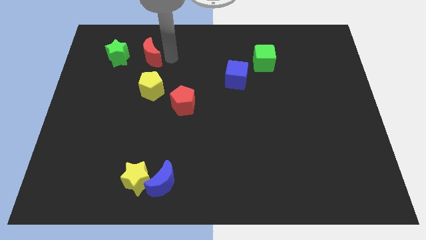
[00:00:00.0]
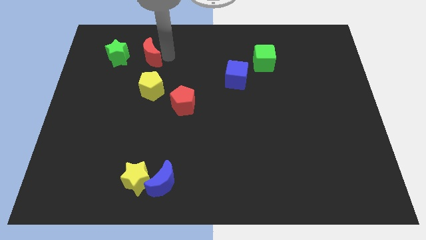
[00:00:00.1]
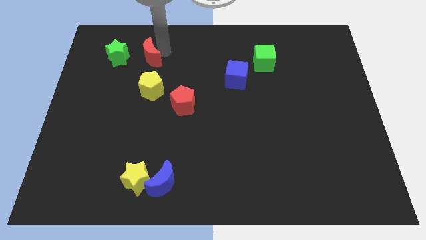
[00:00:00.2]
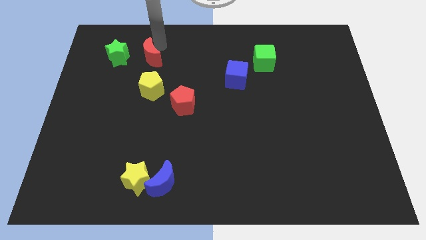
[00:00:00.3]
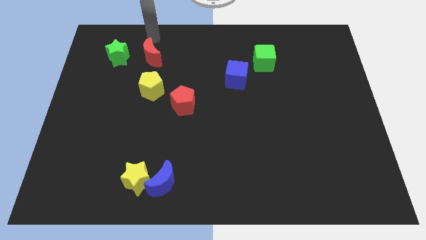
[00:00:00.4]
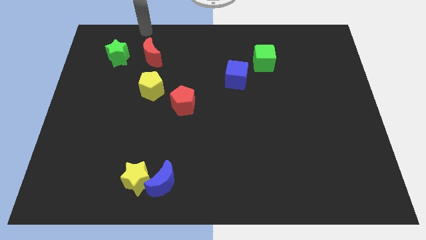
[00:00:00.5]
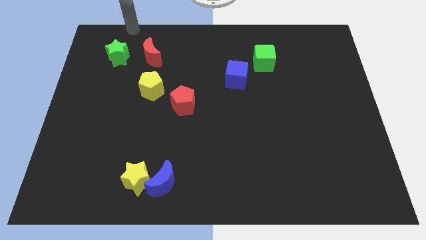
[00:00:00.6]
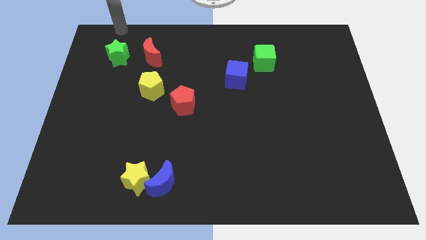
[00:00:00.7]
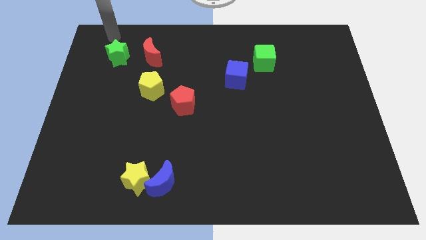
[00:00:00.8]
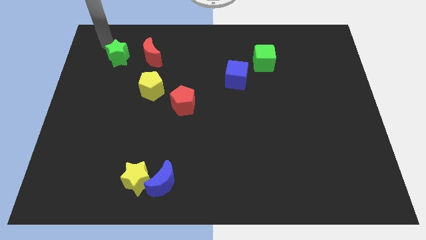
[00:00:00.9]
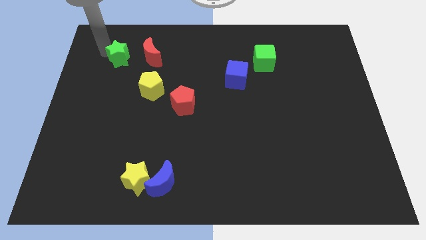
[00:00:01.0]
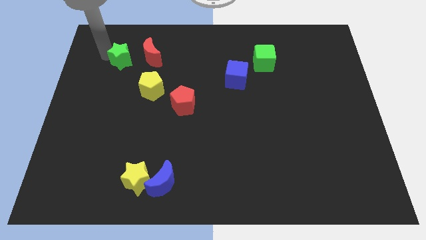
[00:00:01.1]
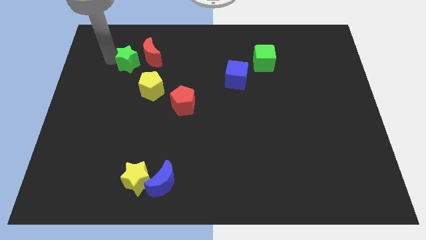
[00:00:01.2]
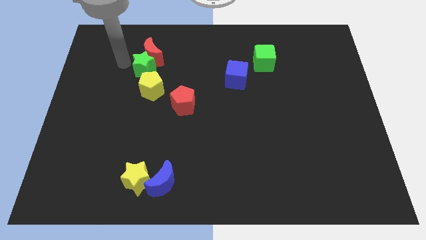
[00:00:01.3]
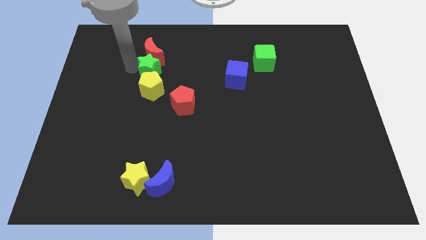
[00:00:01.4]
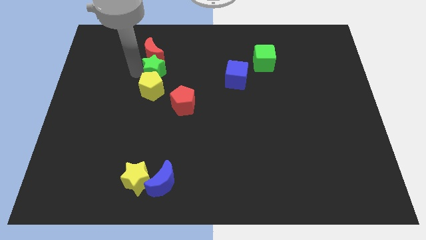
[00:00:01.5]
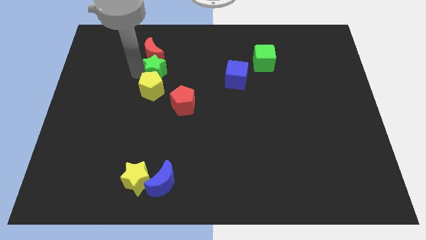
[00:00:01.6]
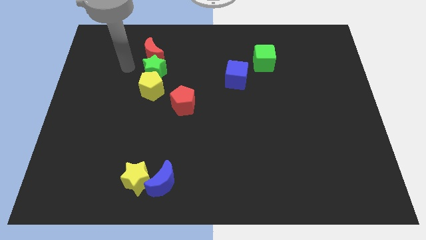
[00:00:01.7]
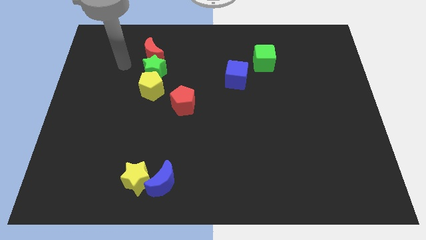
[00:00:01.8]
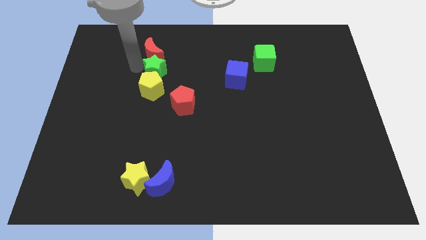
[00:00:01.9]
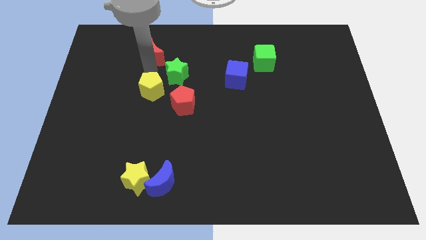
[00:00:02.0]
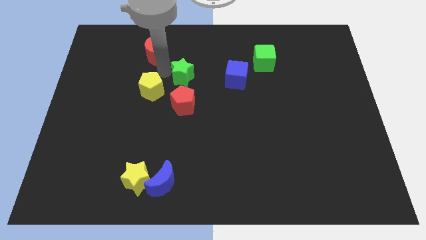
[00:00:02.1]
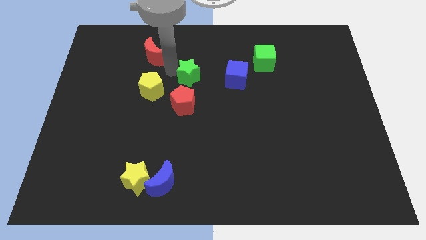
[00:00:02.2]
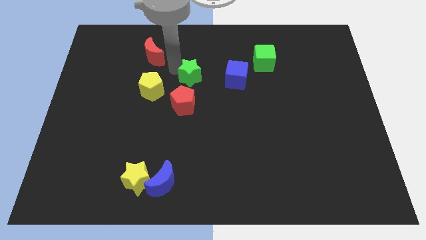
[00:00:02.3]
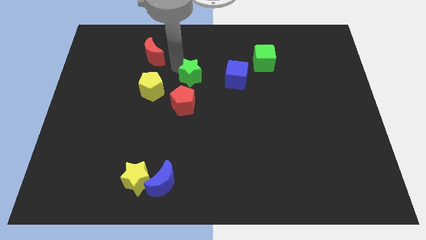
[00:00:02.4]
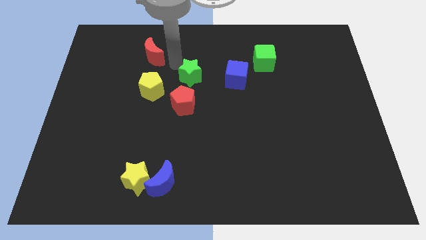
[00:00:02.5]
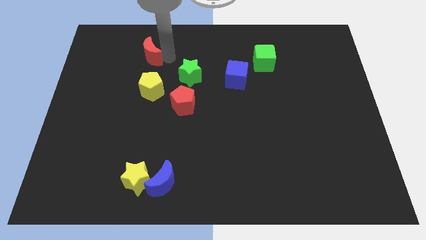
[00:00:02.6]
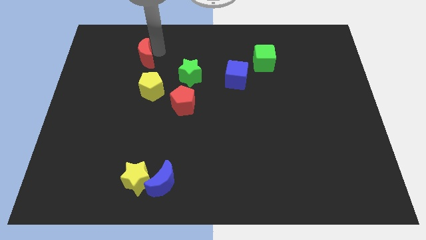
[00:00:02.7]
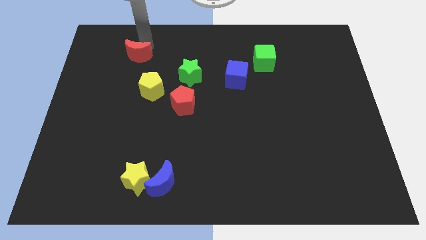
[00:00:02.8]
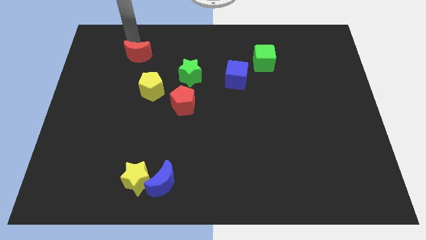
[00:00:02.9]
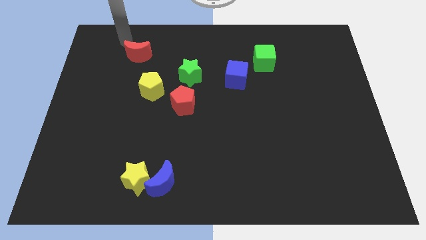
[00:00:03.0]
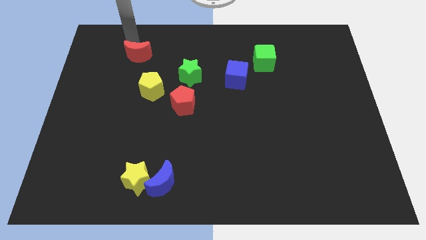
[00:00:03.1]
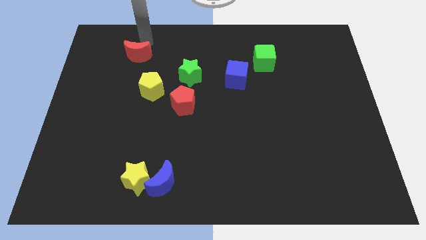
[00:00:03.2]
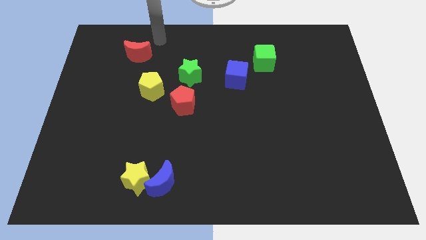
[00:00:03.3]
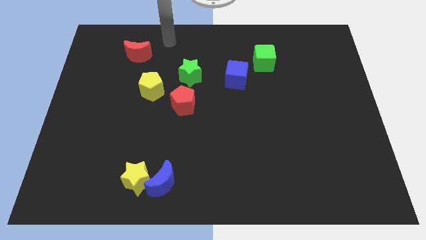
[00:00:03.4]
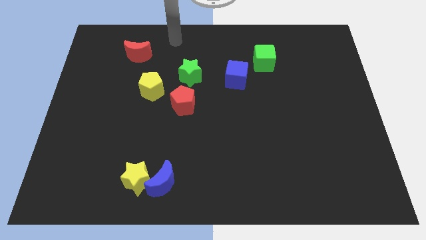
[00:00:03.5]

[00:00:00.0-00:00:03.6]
push the green star to the top of the red pentagon

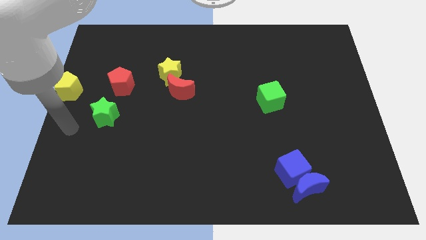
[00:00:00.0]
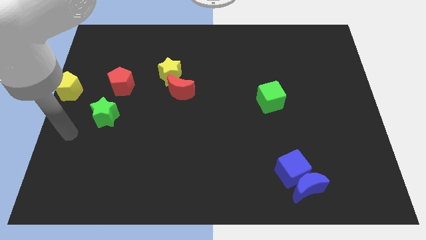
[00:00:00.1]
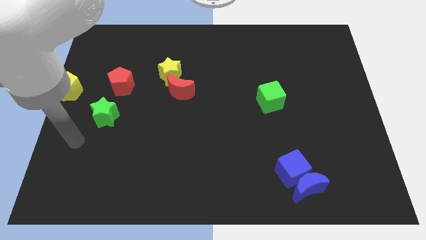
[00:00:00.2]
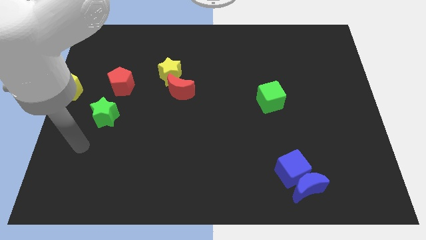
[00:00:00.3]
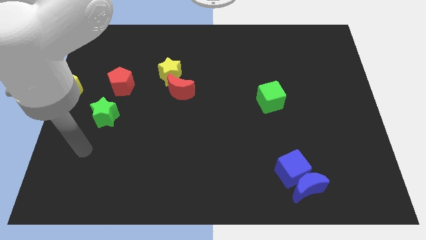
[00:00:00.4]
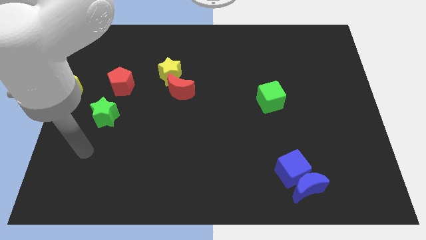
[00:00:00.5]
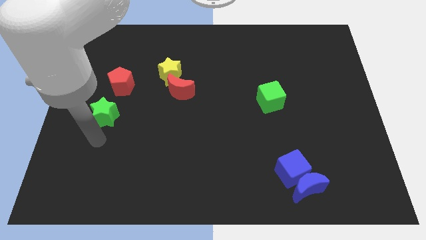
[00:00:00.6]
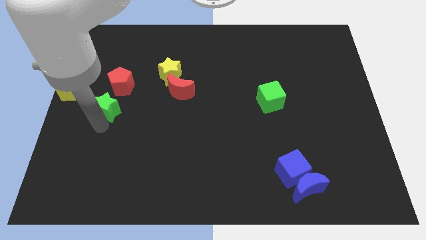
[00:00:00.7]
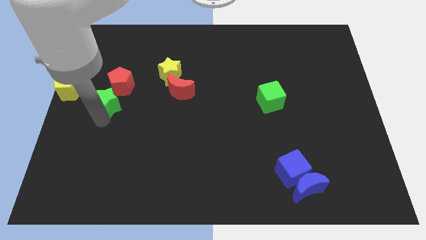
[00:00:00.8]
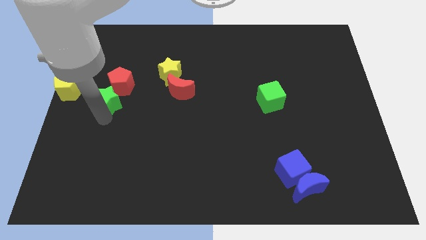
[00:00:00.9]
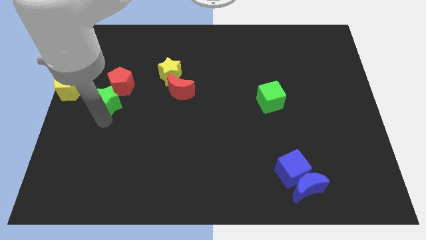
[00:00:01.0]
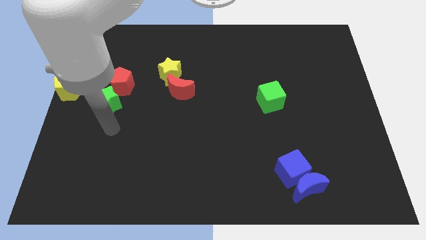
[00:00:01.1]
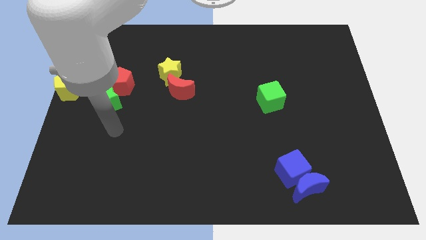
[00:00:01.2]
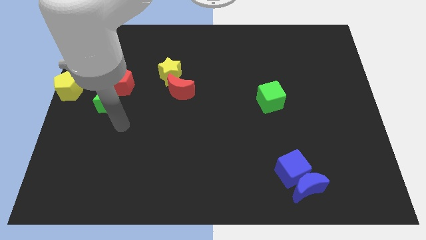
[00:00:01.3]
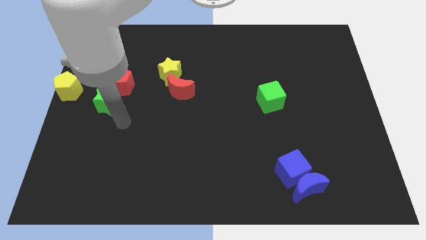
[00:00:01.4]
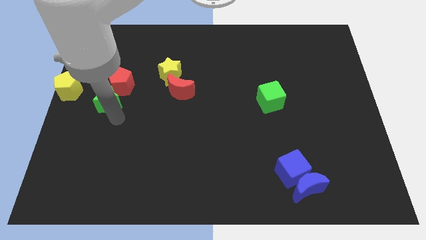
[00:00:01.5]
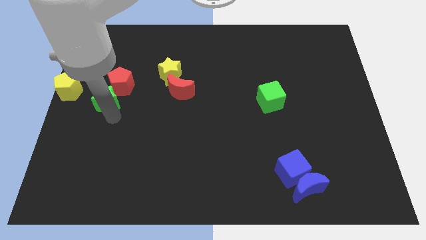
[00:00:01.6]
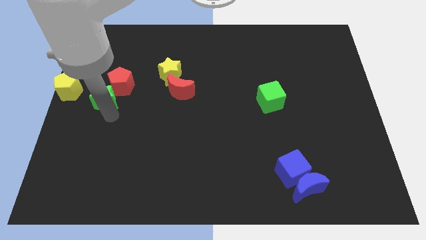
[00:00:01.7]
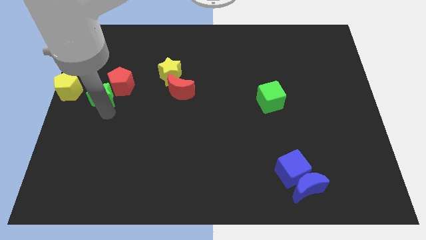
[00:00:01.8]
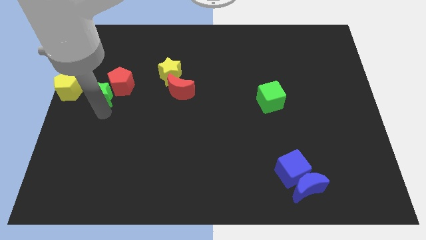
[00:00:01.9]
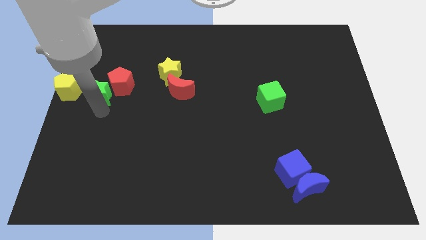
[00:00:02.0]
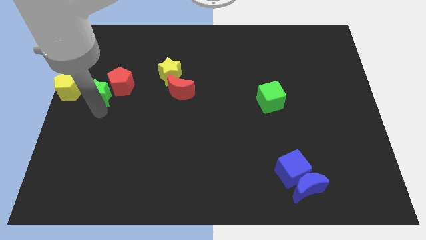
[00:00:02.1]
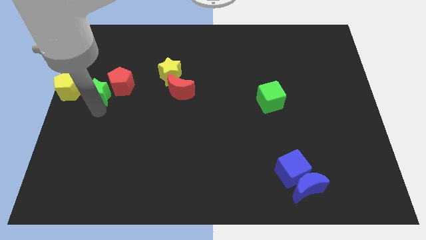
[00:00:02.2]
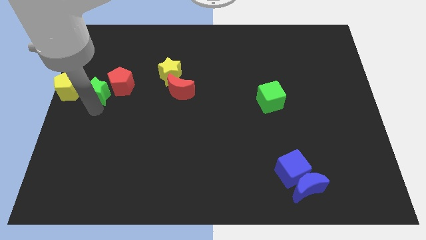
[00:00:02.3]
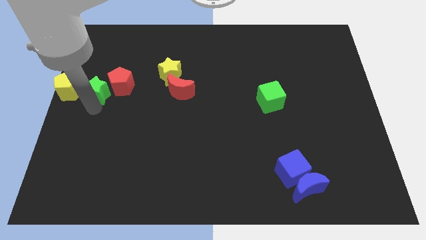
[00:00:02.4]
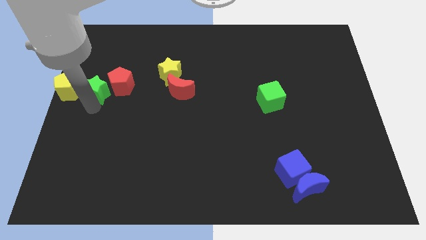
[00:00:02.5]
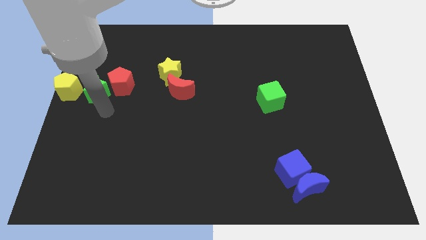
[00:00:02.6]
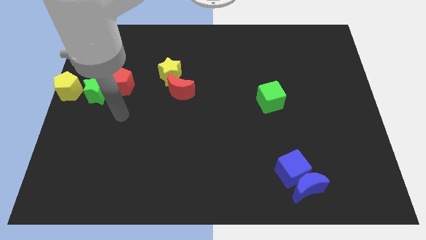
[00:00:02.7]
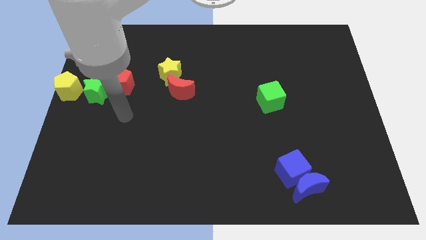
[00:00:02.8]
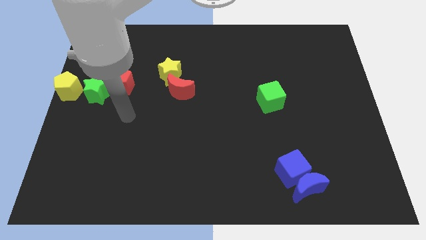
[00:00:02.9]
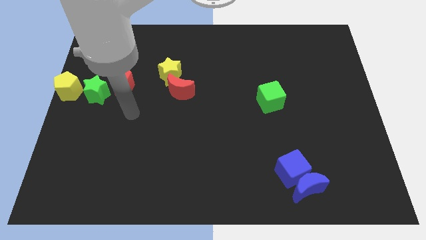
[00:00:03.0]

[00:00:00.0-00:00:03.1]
move the green star in between the yellow pentagon and red pentagon

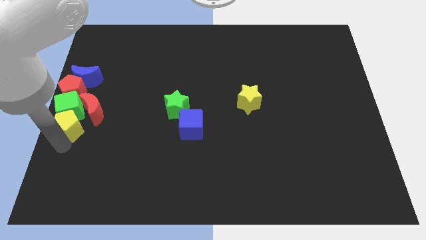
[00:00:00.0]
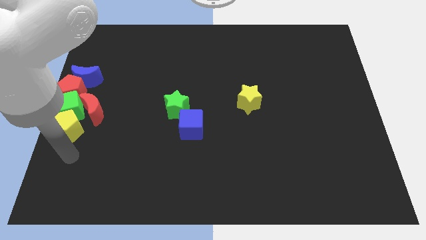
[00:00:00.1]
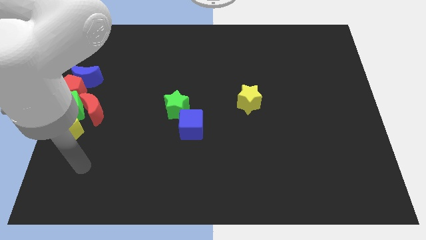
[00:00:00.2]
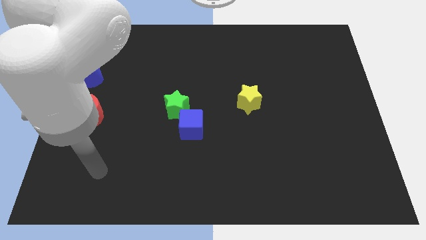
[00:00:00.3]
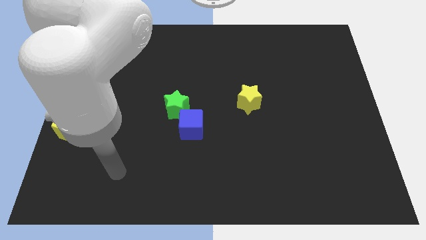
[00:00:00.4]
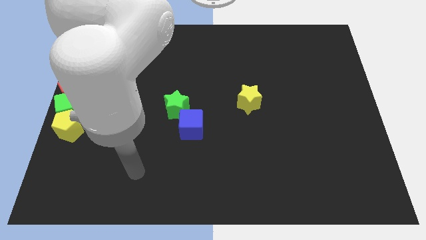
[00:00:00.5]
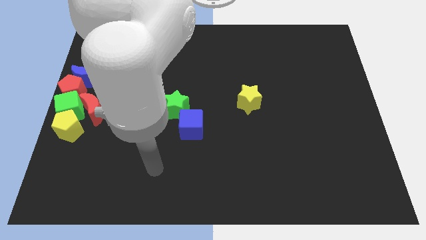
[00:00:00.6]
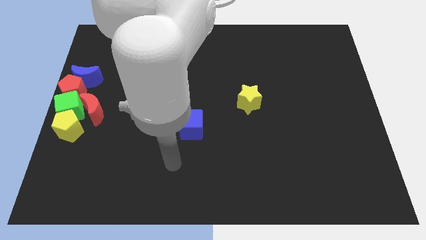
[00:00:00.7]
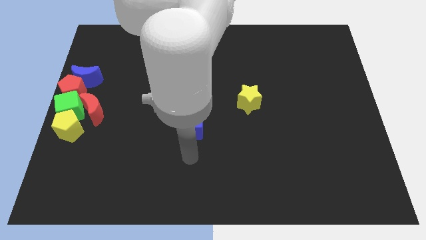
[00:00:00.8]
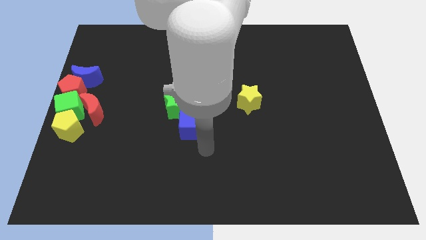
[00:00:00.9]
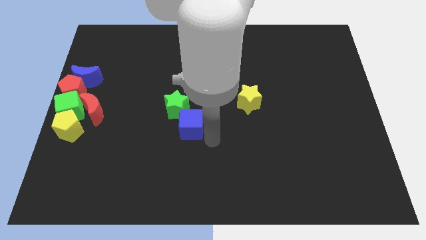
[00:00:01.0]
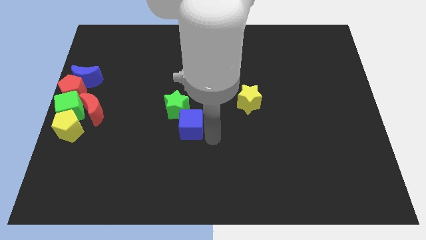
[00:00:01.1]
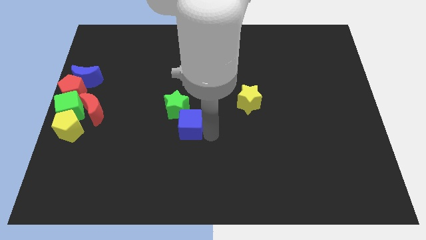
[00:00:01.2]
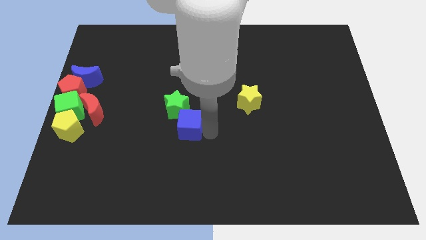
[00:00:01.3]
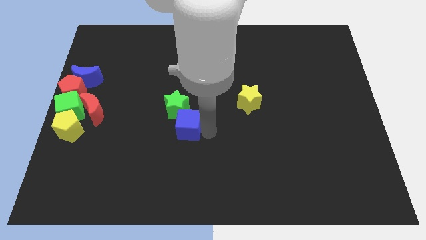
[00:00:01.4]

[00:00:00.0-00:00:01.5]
place the arm right to the blue cube

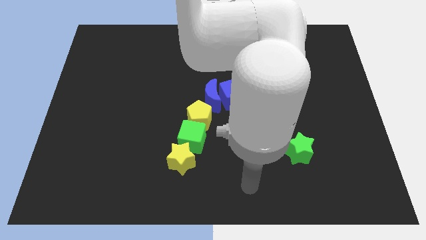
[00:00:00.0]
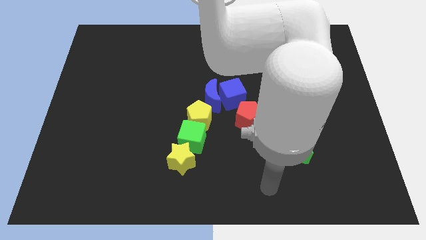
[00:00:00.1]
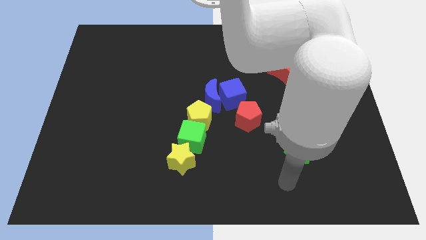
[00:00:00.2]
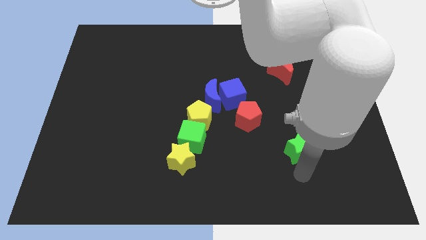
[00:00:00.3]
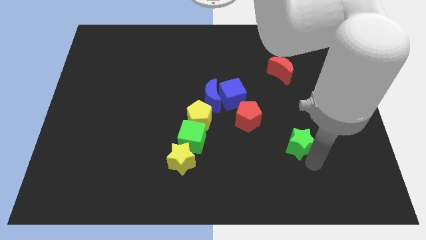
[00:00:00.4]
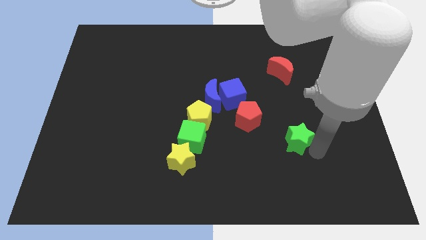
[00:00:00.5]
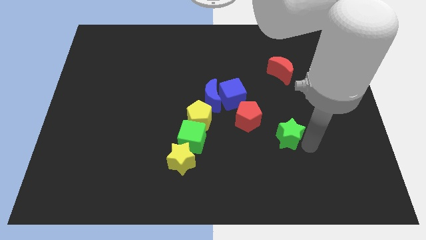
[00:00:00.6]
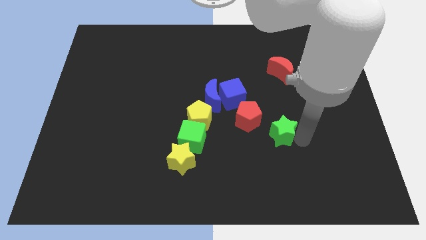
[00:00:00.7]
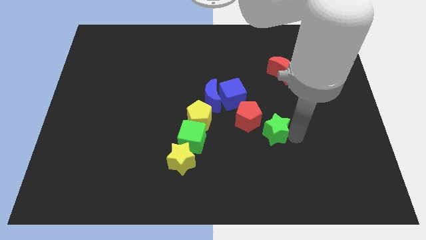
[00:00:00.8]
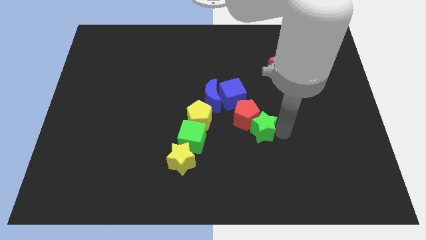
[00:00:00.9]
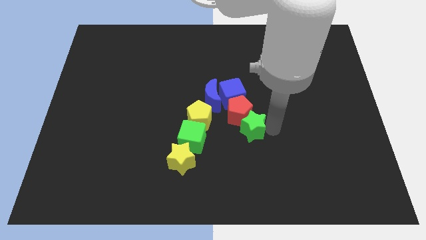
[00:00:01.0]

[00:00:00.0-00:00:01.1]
push the green star into the red pentagon
